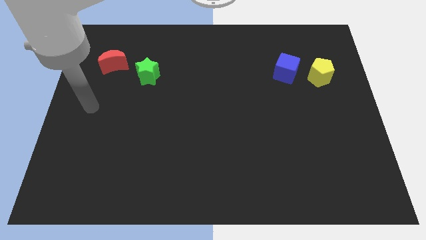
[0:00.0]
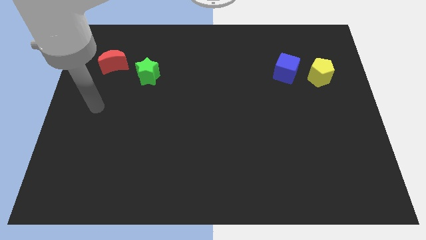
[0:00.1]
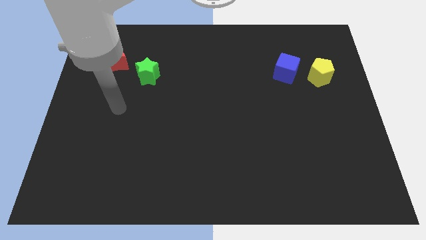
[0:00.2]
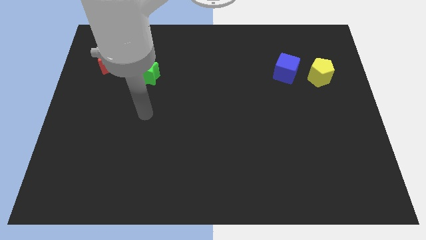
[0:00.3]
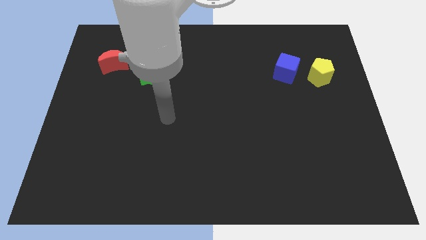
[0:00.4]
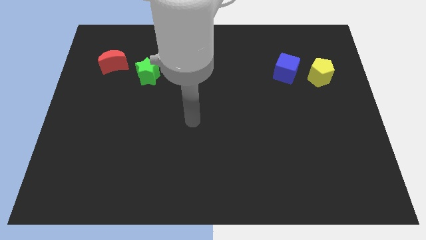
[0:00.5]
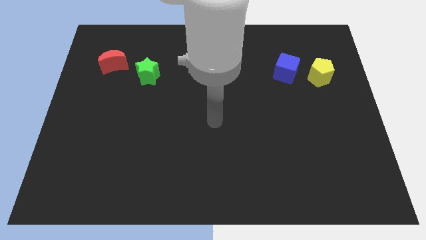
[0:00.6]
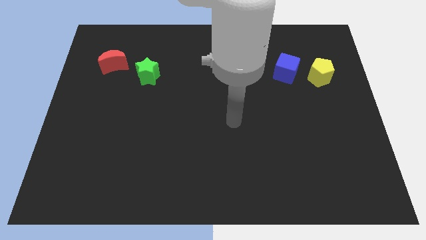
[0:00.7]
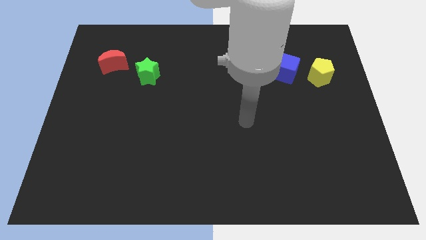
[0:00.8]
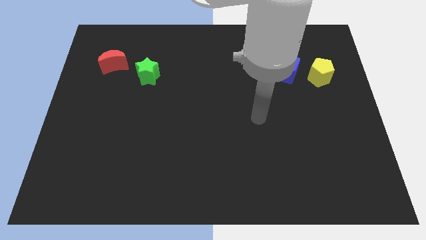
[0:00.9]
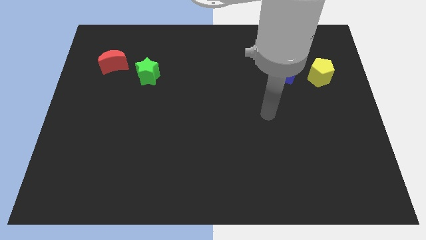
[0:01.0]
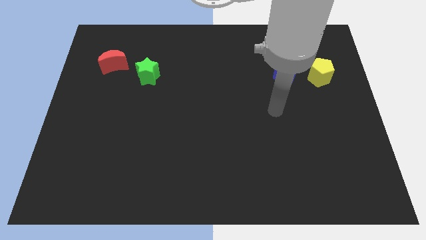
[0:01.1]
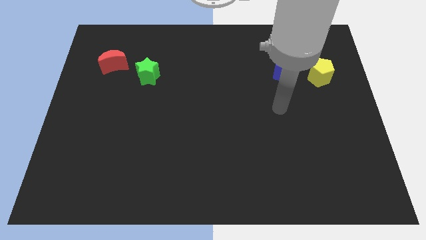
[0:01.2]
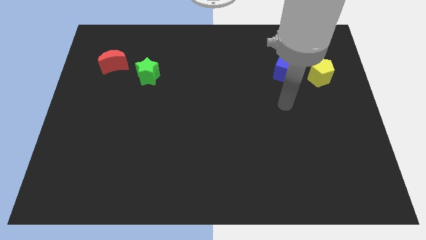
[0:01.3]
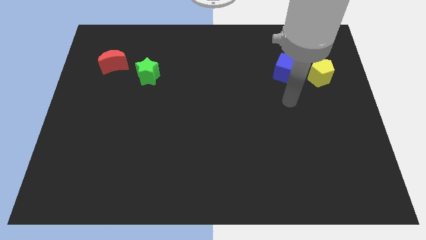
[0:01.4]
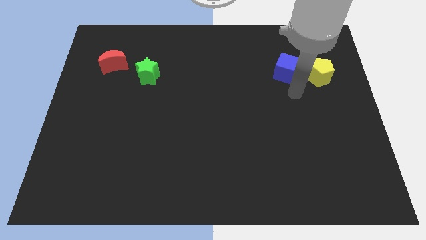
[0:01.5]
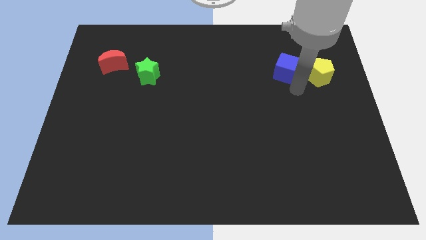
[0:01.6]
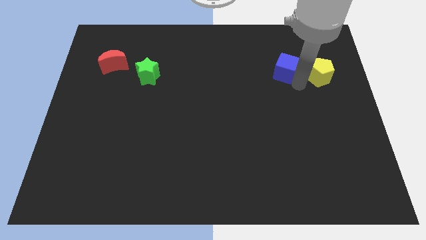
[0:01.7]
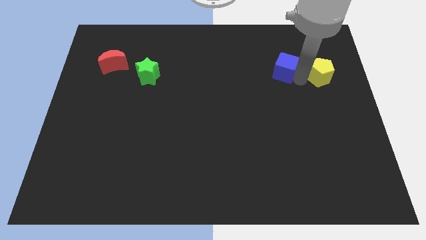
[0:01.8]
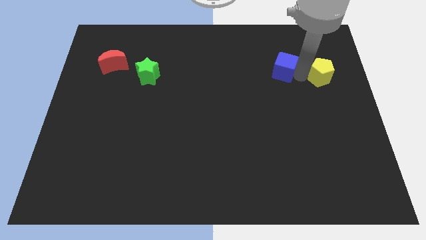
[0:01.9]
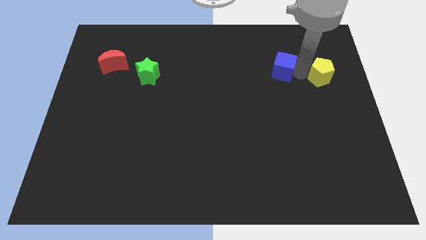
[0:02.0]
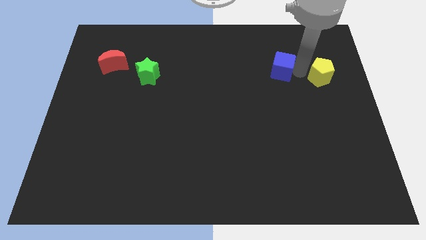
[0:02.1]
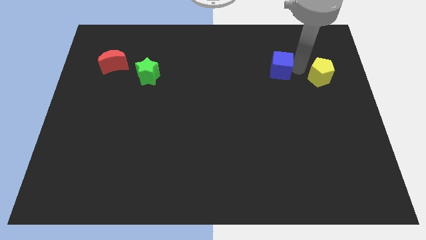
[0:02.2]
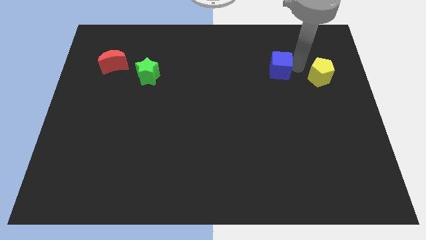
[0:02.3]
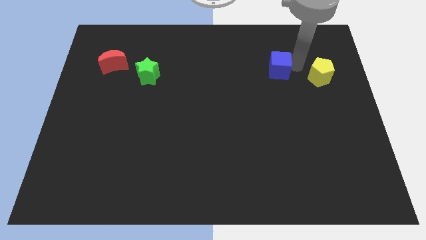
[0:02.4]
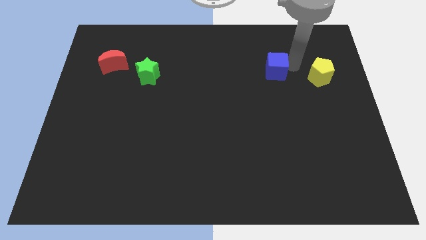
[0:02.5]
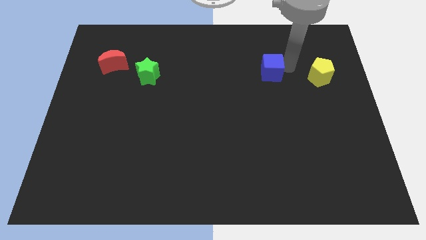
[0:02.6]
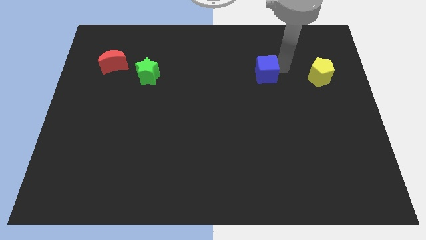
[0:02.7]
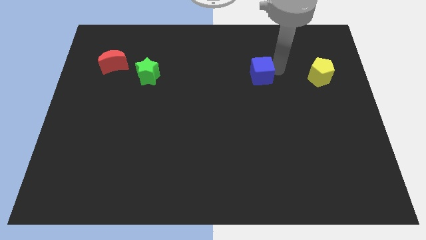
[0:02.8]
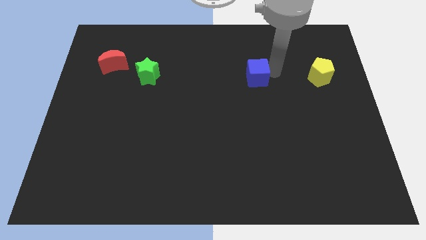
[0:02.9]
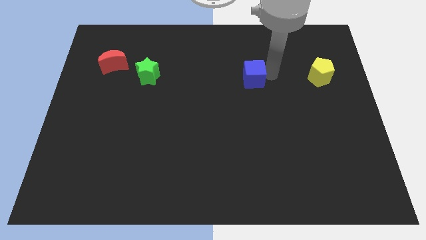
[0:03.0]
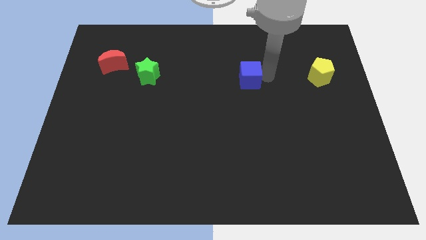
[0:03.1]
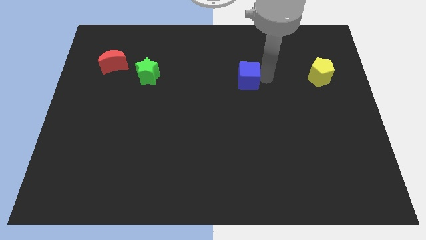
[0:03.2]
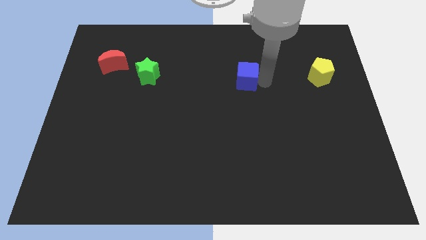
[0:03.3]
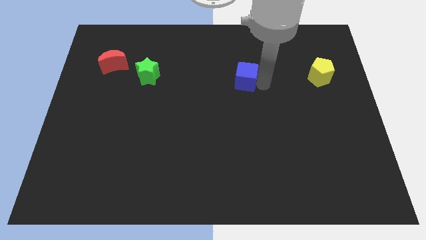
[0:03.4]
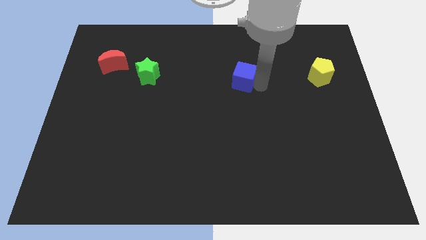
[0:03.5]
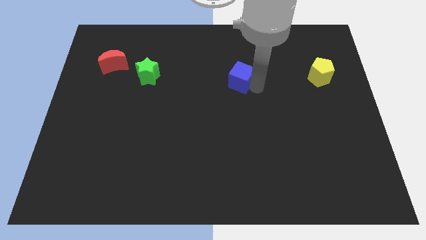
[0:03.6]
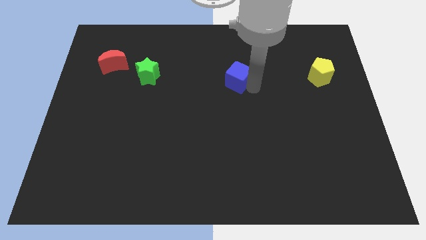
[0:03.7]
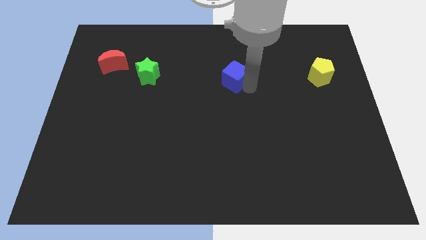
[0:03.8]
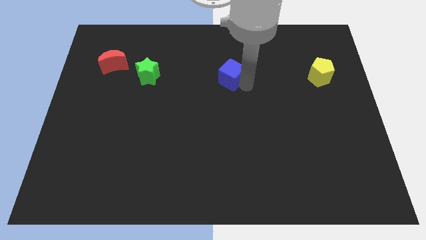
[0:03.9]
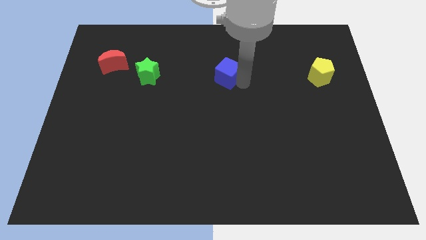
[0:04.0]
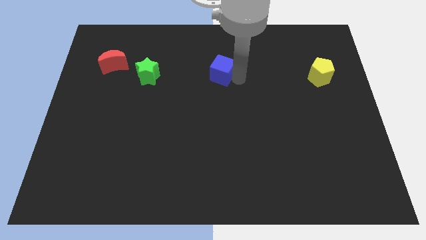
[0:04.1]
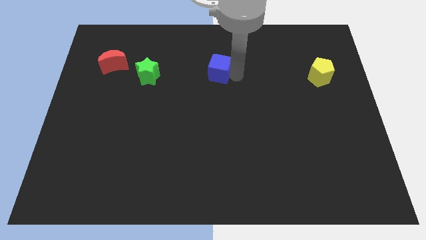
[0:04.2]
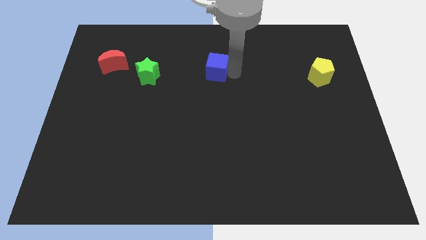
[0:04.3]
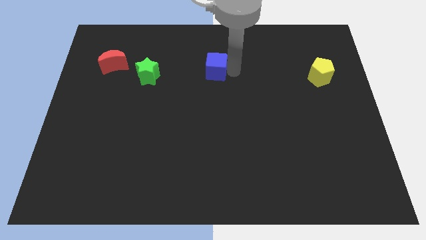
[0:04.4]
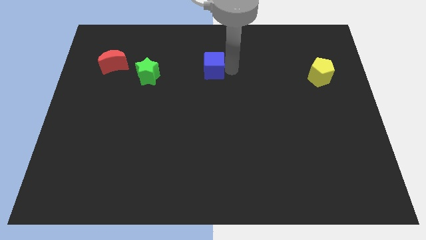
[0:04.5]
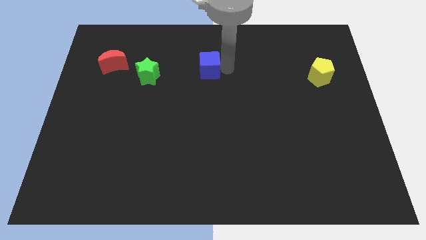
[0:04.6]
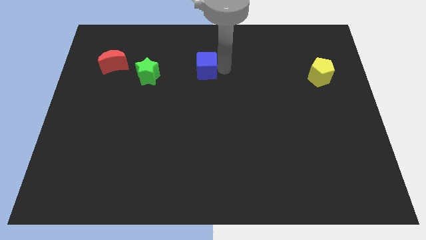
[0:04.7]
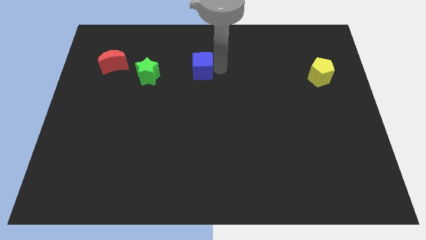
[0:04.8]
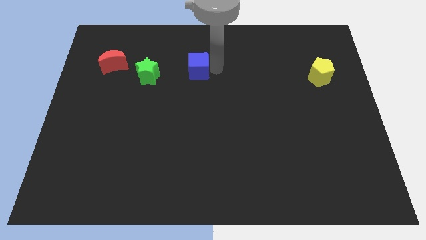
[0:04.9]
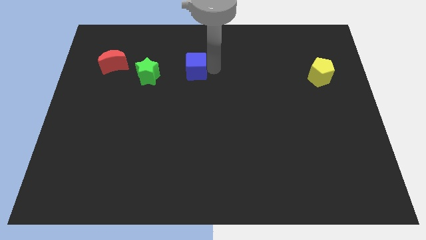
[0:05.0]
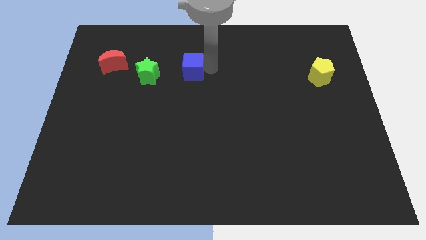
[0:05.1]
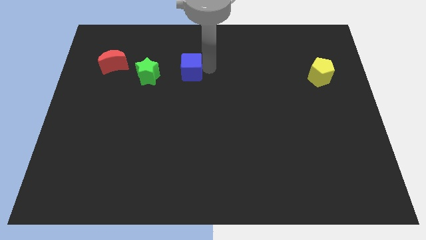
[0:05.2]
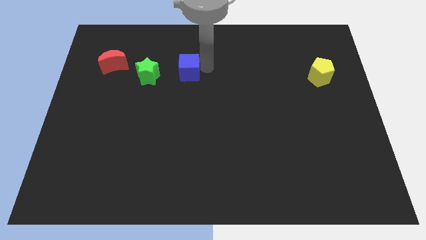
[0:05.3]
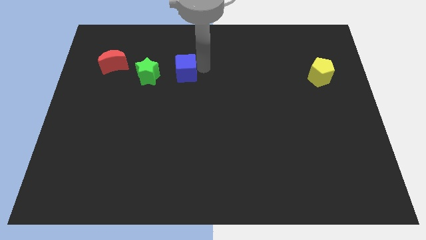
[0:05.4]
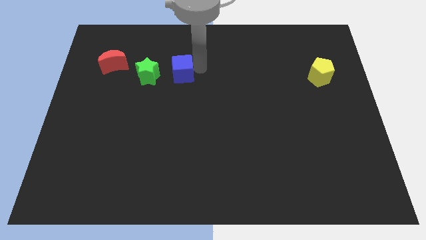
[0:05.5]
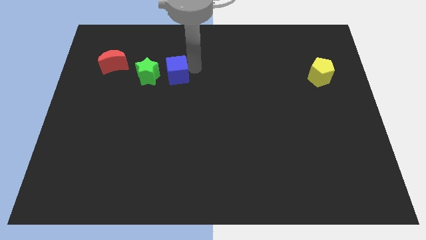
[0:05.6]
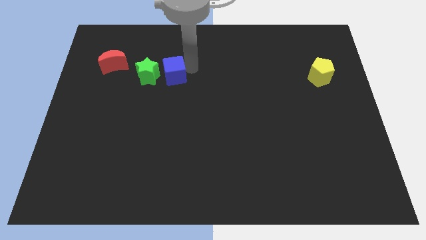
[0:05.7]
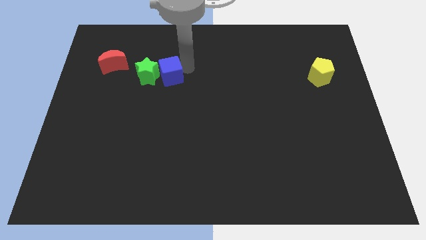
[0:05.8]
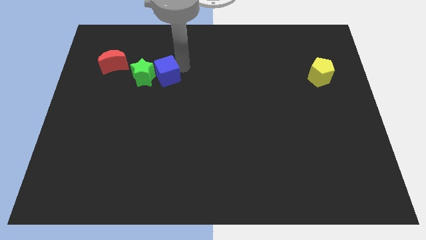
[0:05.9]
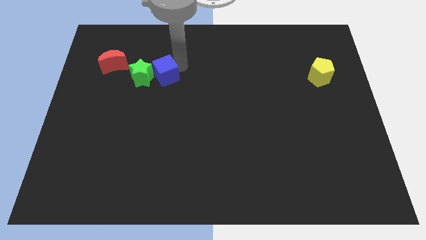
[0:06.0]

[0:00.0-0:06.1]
push the cube next to the star

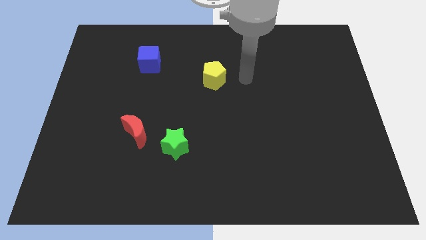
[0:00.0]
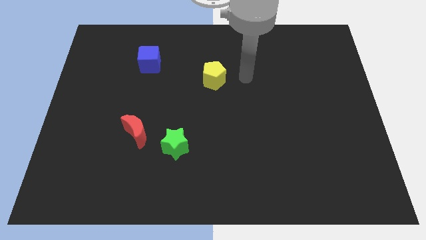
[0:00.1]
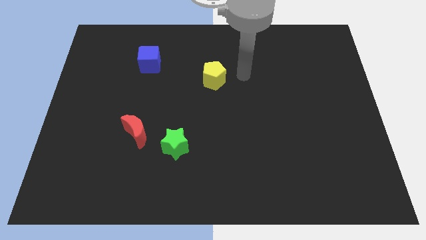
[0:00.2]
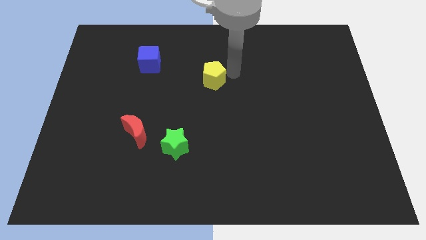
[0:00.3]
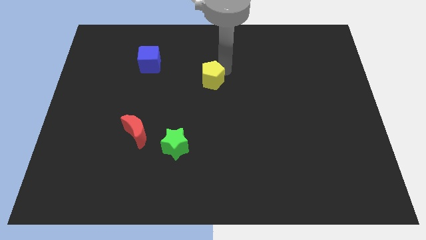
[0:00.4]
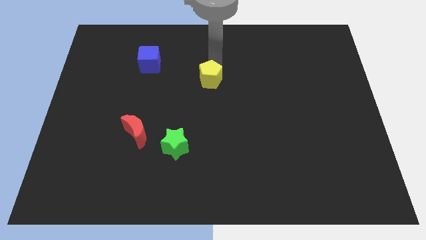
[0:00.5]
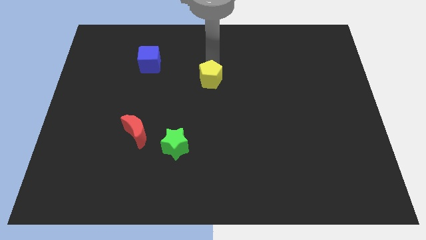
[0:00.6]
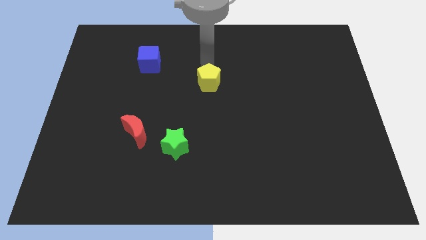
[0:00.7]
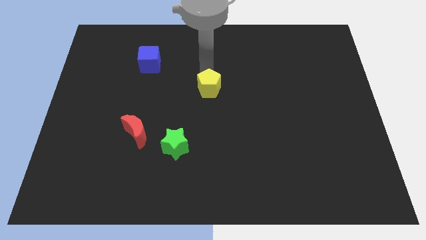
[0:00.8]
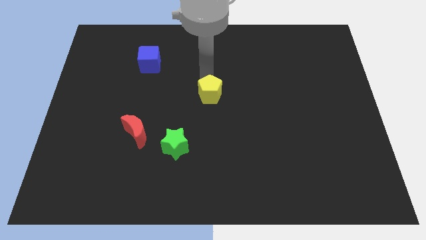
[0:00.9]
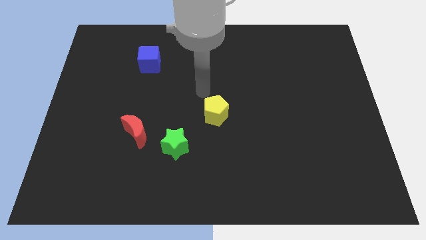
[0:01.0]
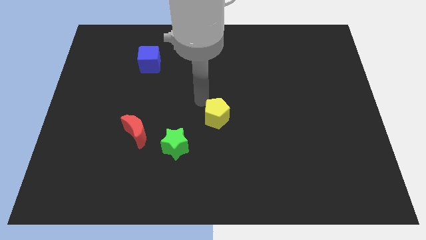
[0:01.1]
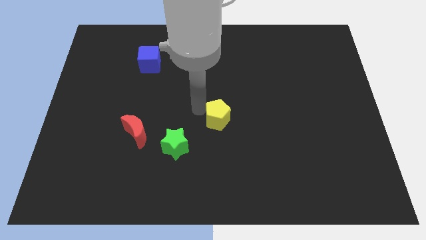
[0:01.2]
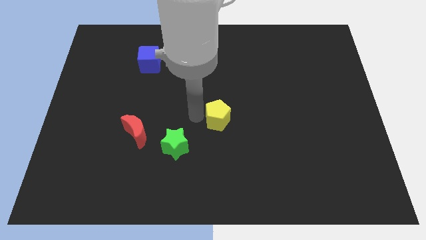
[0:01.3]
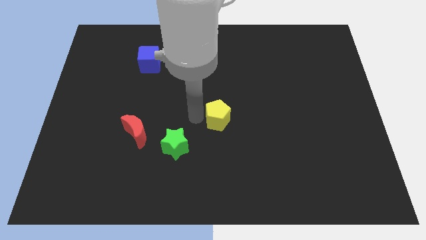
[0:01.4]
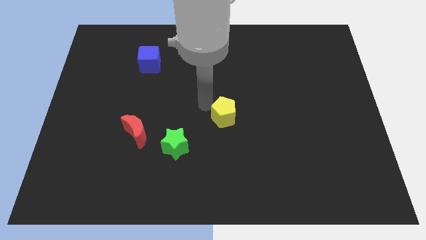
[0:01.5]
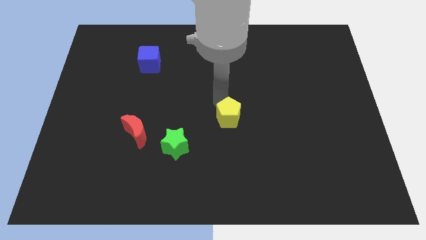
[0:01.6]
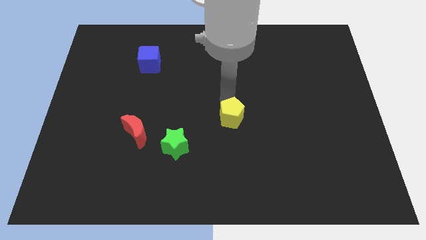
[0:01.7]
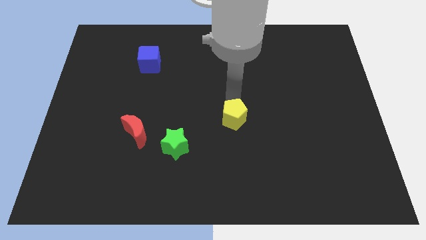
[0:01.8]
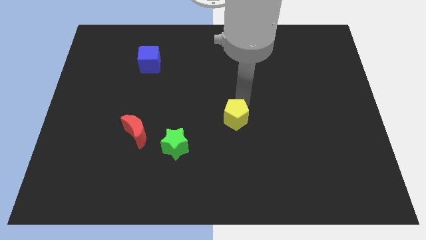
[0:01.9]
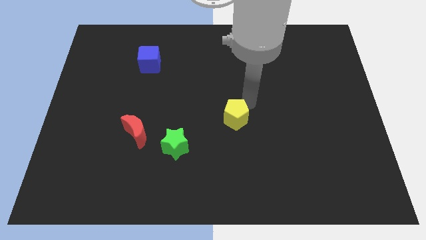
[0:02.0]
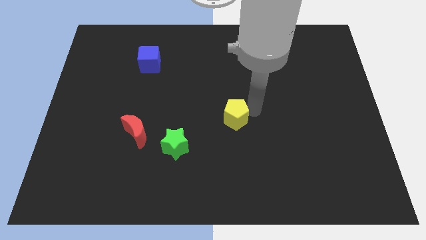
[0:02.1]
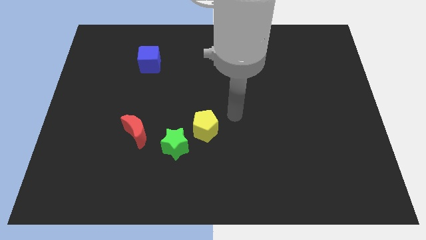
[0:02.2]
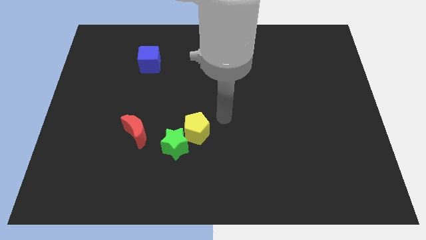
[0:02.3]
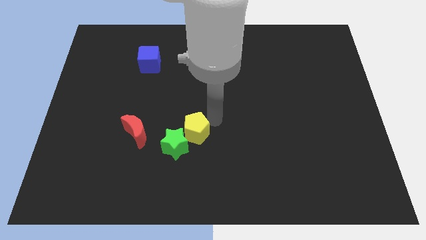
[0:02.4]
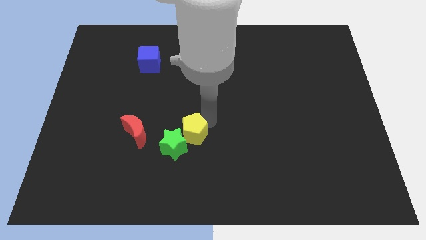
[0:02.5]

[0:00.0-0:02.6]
move the yellow pentagon close to the green star
